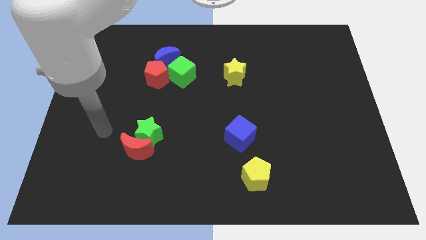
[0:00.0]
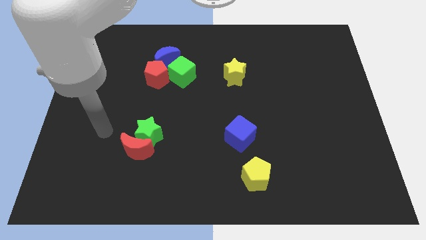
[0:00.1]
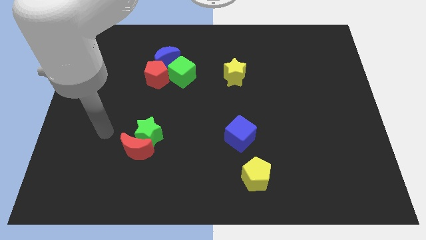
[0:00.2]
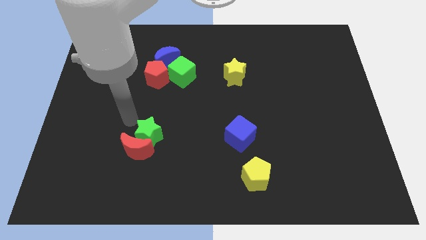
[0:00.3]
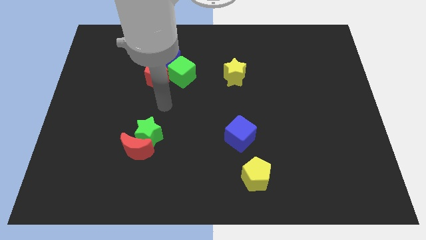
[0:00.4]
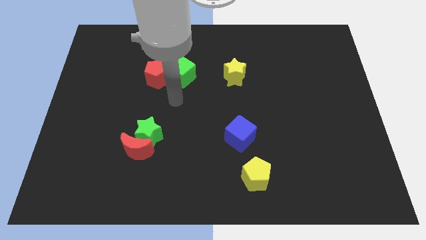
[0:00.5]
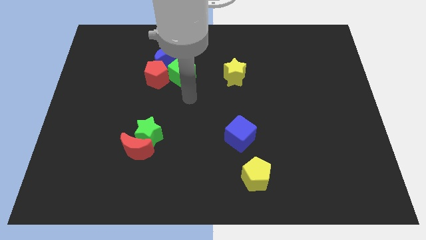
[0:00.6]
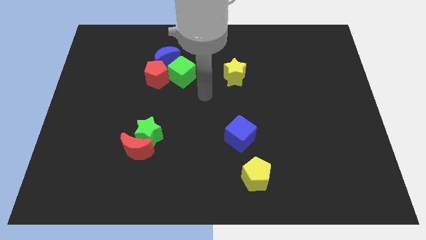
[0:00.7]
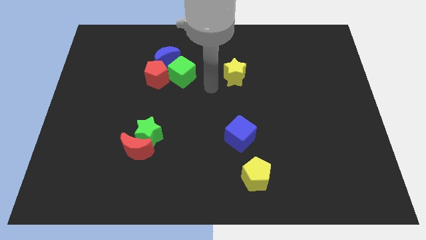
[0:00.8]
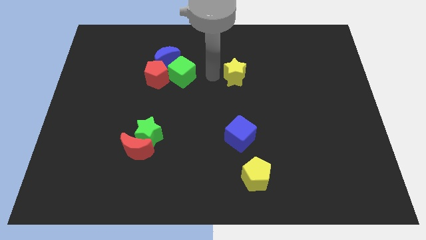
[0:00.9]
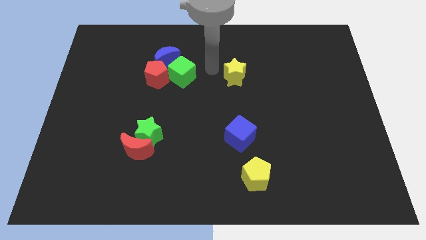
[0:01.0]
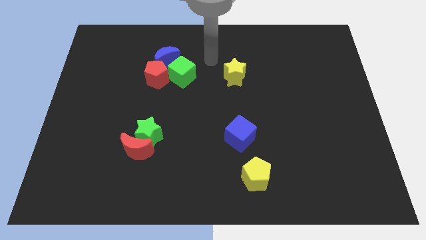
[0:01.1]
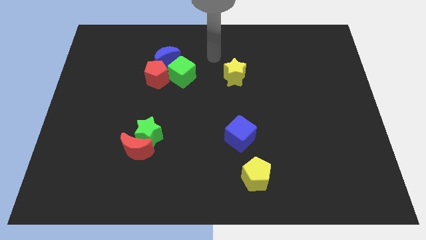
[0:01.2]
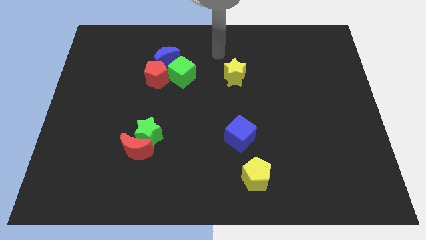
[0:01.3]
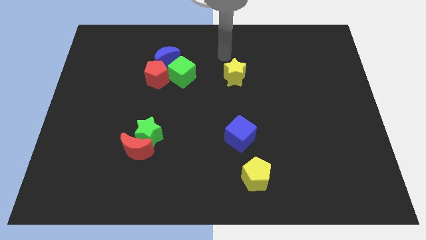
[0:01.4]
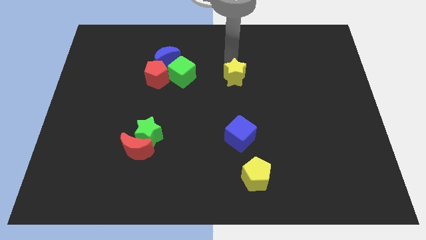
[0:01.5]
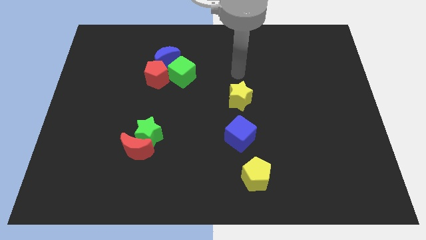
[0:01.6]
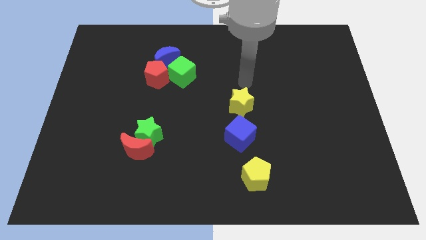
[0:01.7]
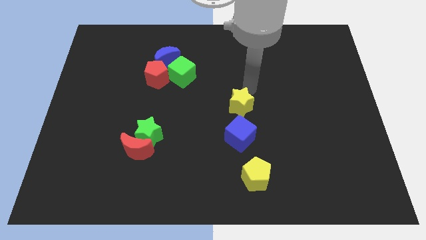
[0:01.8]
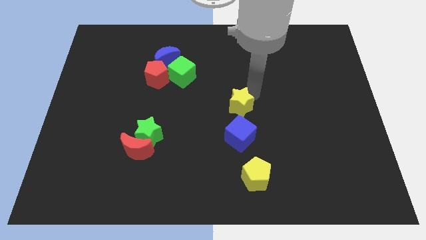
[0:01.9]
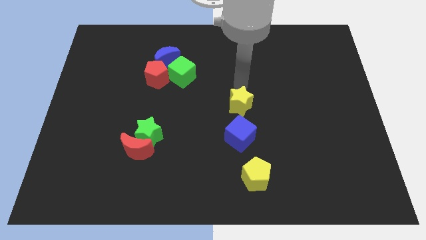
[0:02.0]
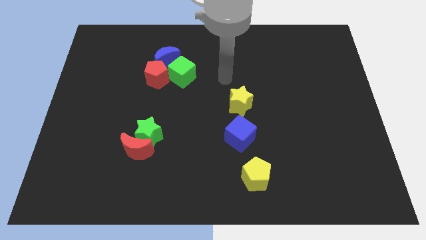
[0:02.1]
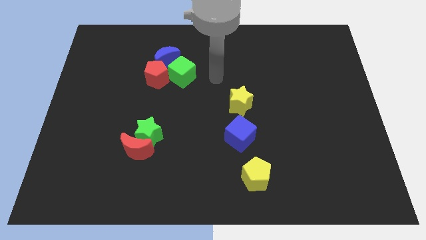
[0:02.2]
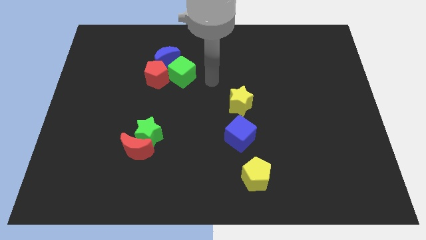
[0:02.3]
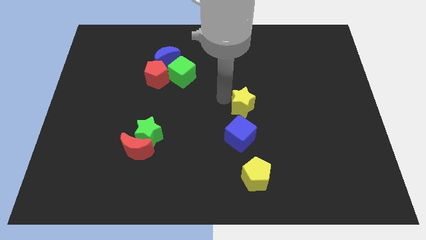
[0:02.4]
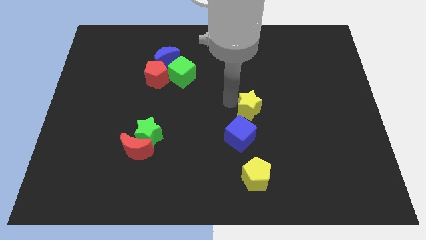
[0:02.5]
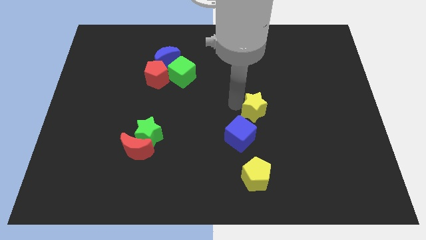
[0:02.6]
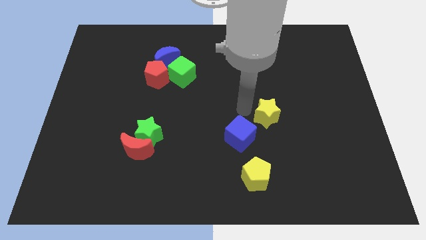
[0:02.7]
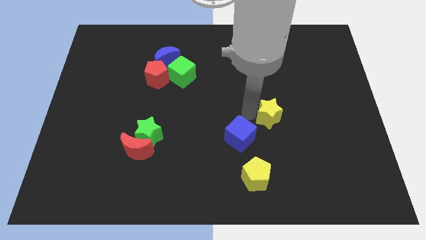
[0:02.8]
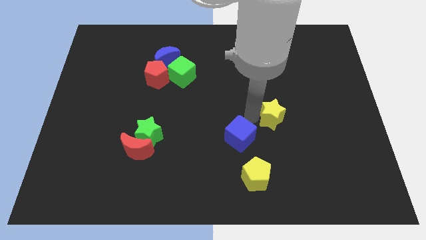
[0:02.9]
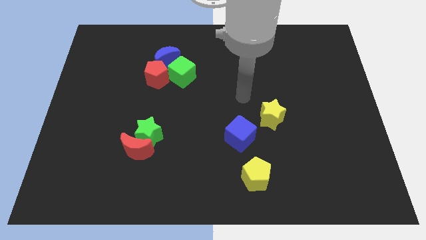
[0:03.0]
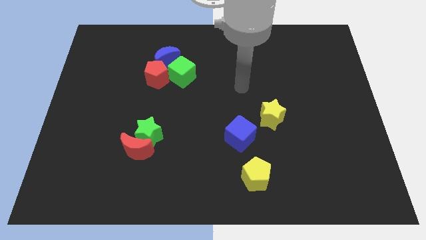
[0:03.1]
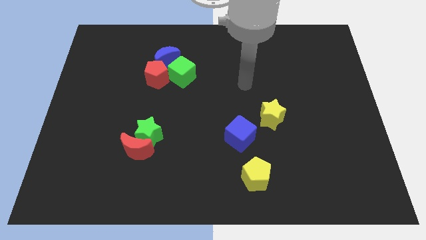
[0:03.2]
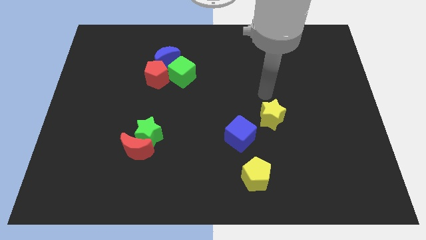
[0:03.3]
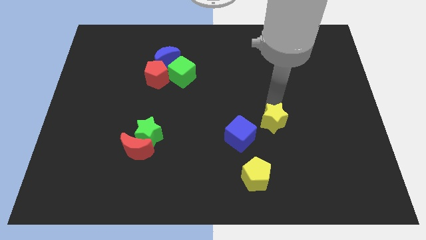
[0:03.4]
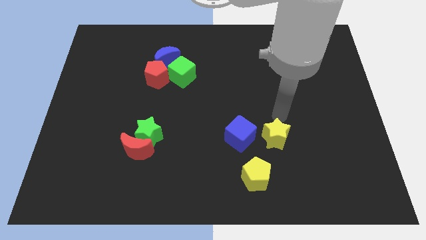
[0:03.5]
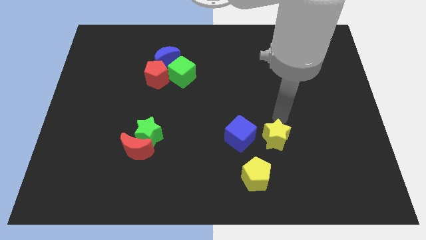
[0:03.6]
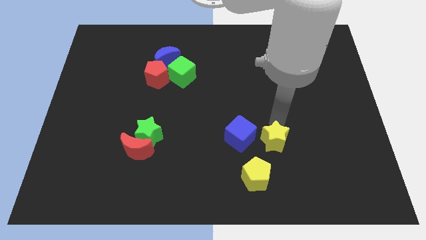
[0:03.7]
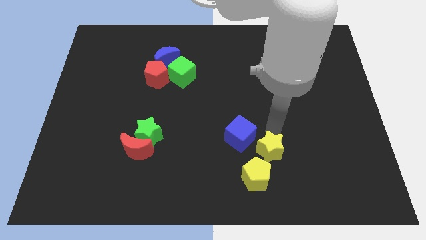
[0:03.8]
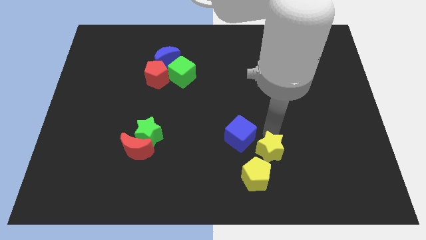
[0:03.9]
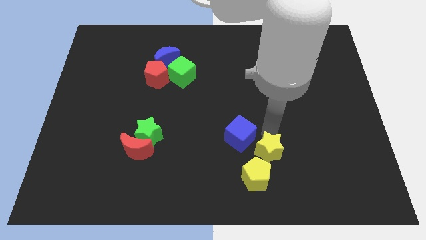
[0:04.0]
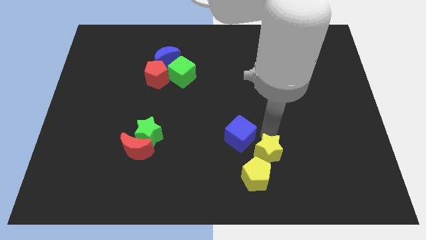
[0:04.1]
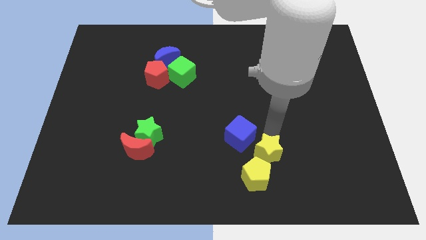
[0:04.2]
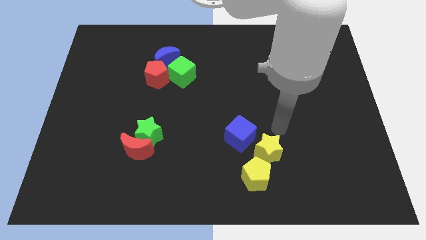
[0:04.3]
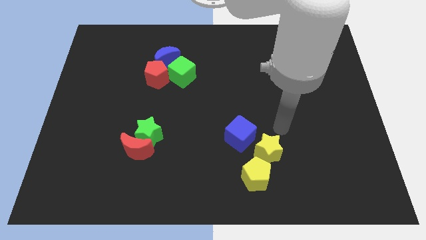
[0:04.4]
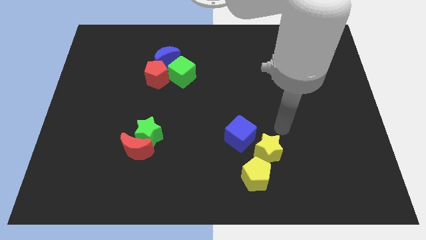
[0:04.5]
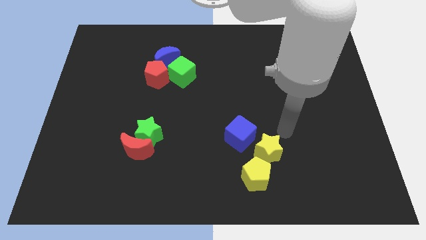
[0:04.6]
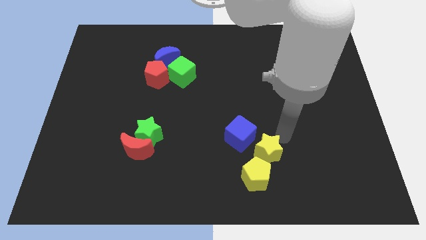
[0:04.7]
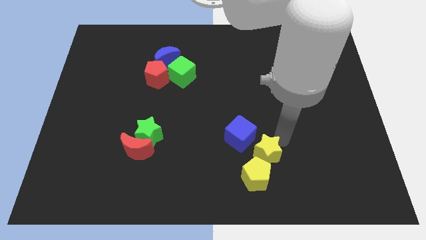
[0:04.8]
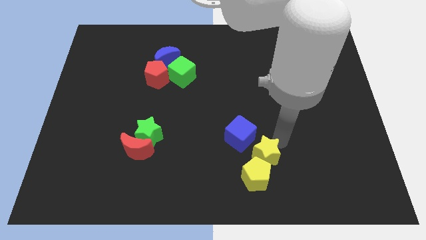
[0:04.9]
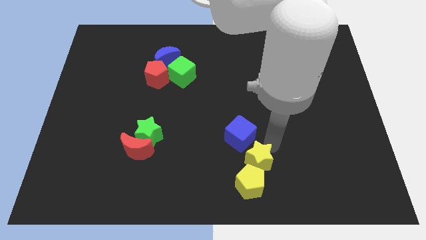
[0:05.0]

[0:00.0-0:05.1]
push the yellow star close to the yellow pentagon

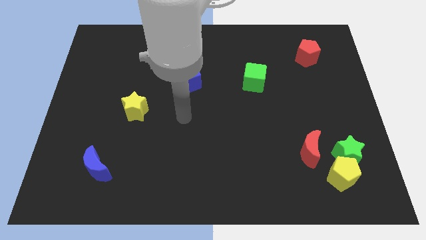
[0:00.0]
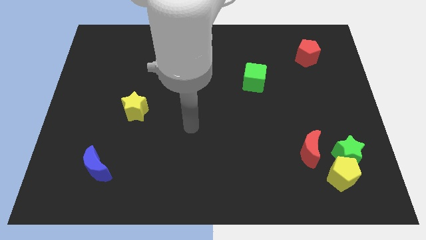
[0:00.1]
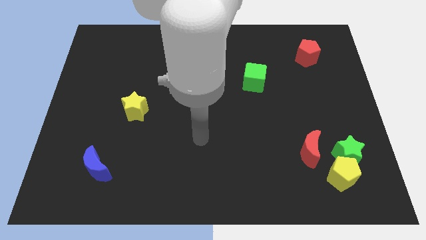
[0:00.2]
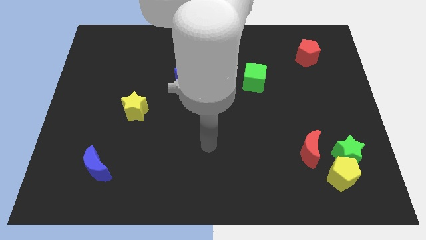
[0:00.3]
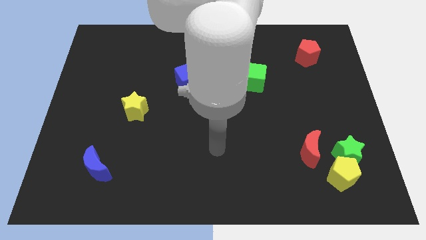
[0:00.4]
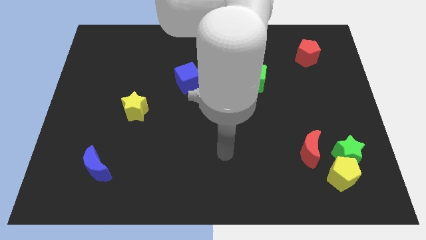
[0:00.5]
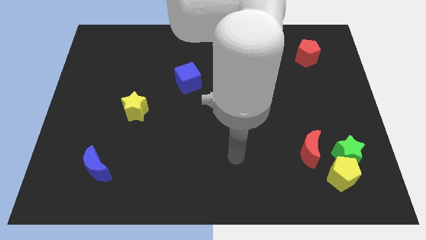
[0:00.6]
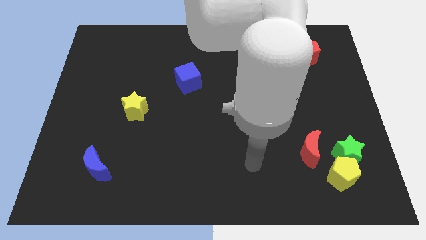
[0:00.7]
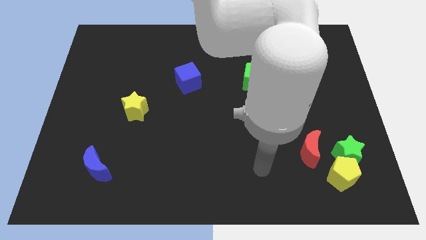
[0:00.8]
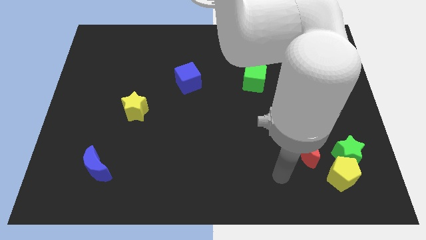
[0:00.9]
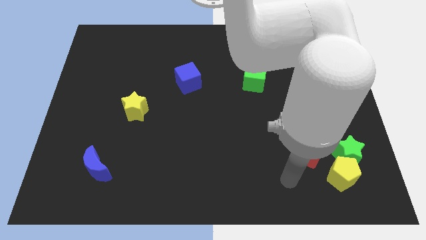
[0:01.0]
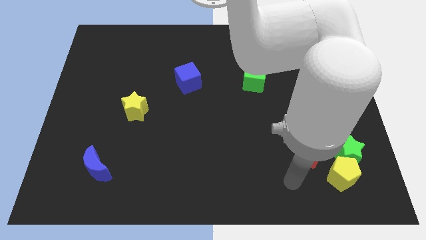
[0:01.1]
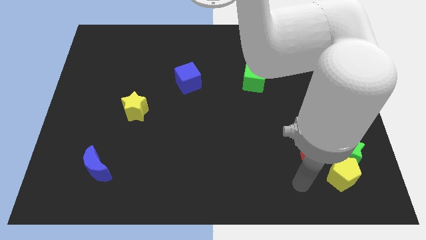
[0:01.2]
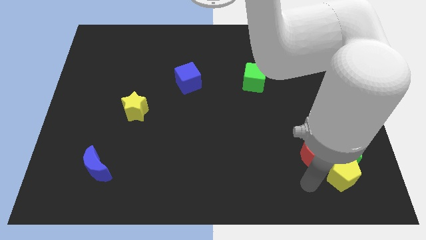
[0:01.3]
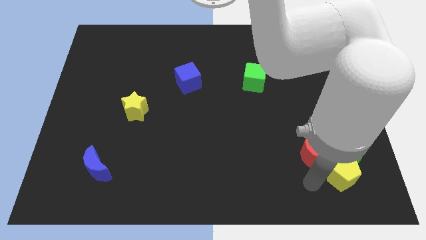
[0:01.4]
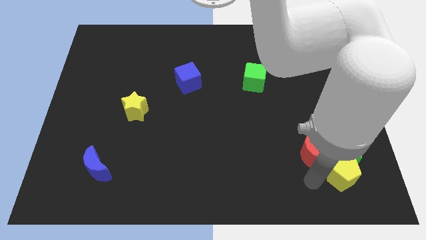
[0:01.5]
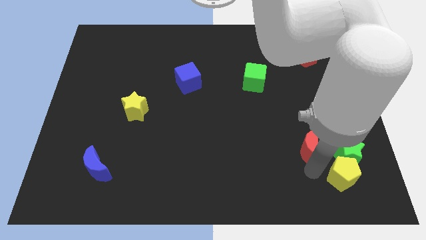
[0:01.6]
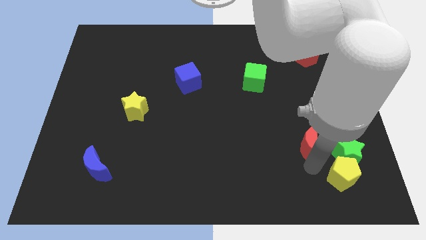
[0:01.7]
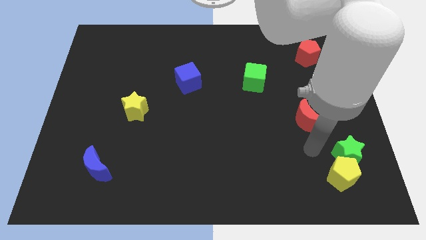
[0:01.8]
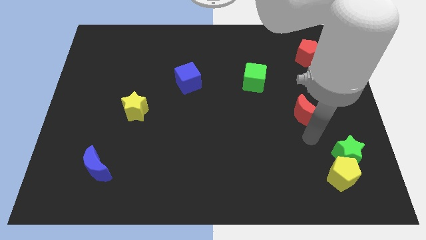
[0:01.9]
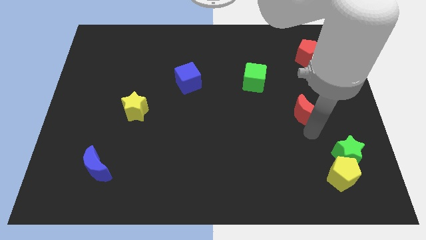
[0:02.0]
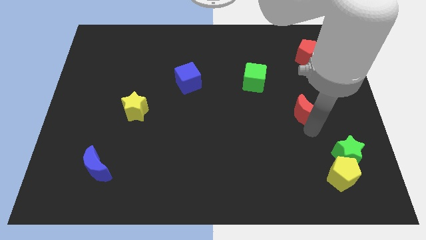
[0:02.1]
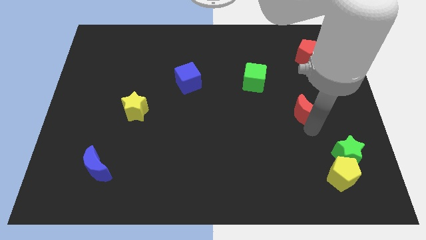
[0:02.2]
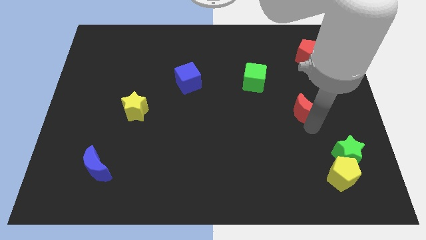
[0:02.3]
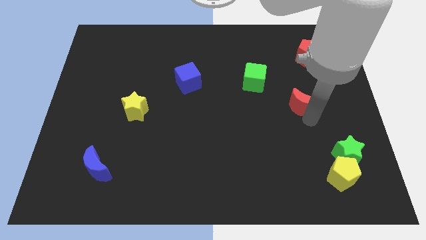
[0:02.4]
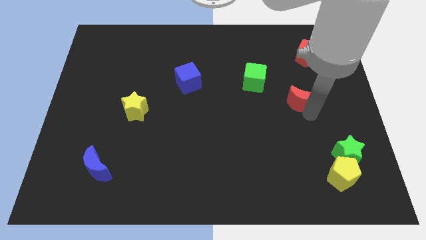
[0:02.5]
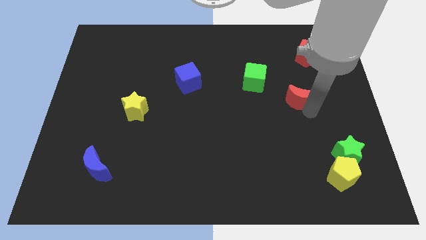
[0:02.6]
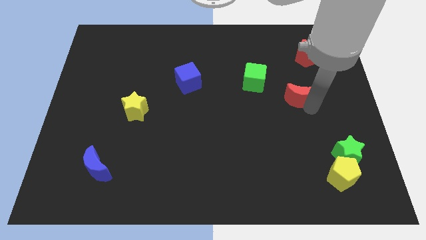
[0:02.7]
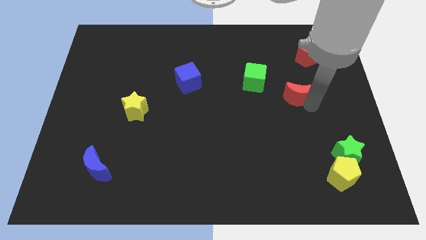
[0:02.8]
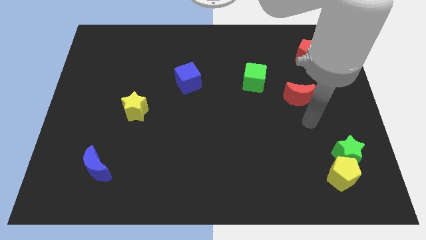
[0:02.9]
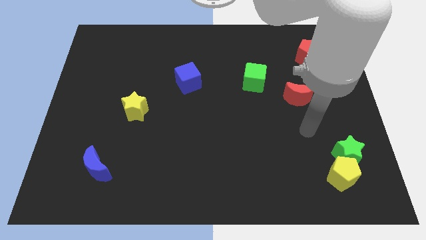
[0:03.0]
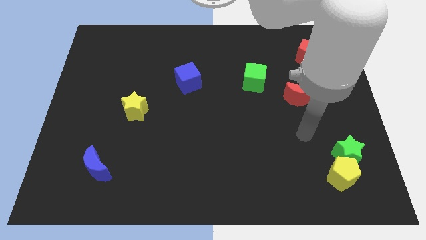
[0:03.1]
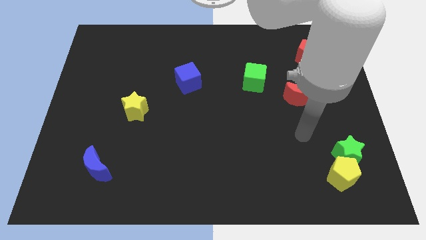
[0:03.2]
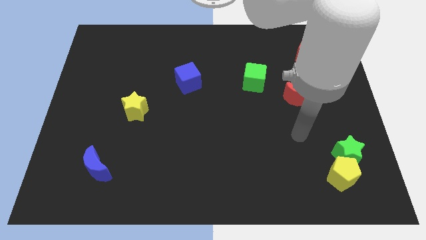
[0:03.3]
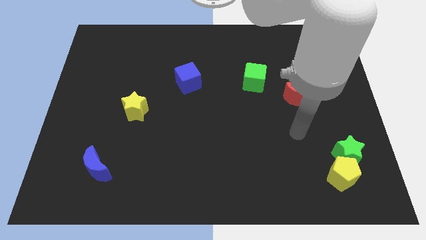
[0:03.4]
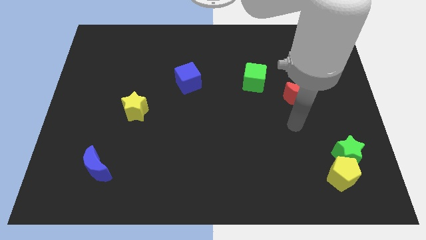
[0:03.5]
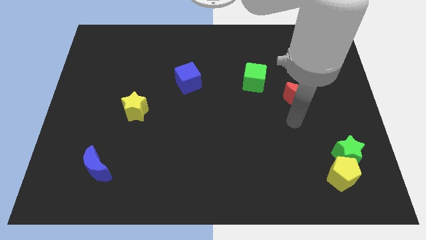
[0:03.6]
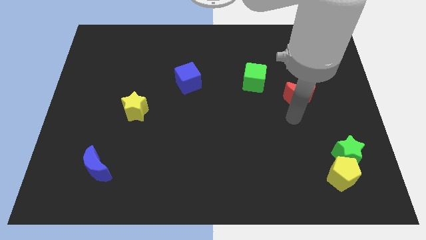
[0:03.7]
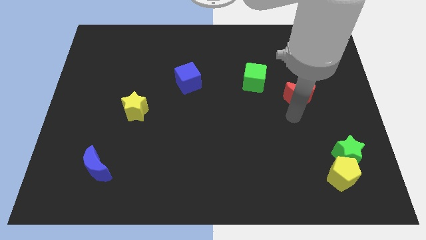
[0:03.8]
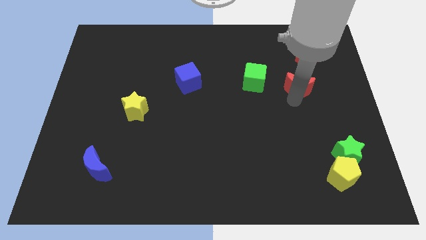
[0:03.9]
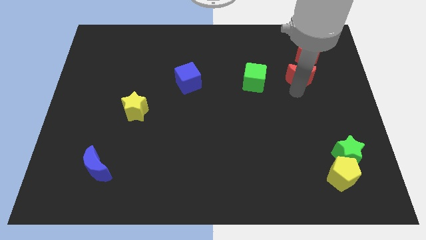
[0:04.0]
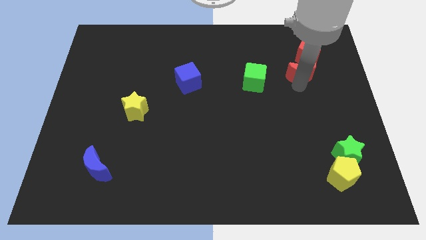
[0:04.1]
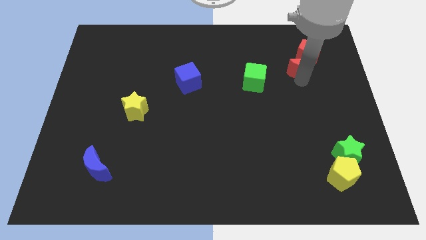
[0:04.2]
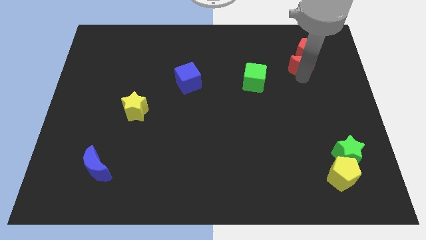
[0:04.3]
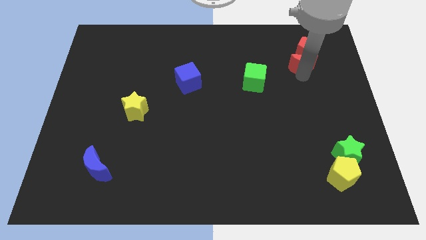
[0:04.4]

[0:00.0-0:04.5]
put the red moon next to the red pentagon
